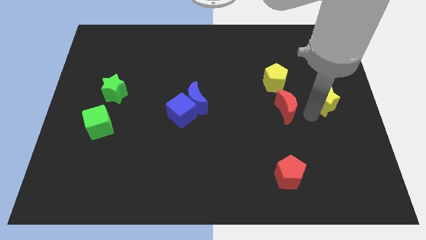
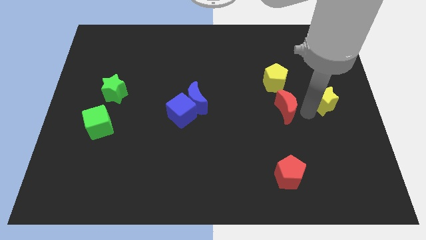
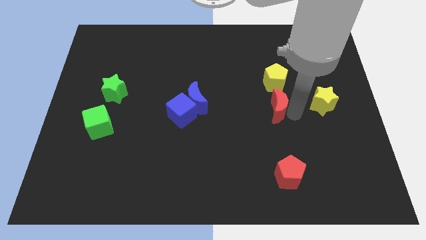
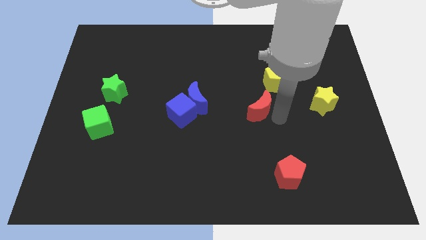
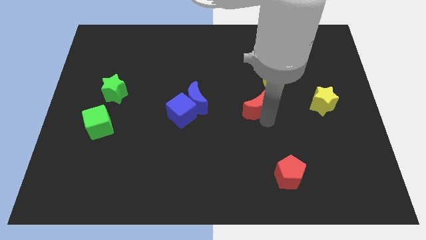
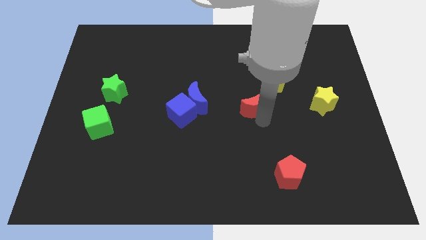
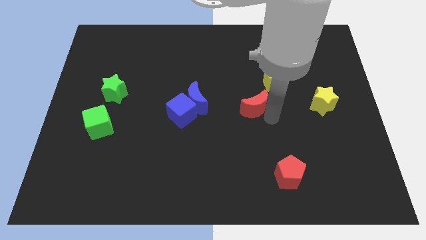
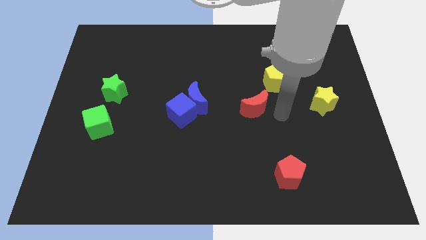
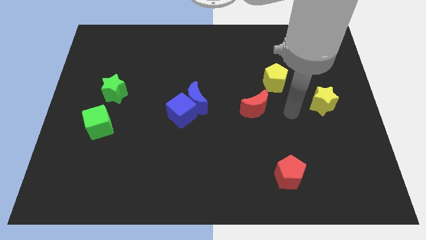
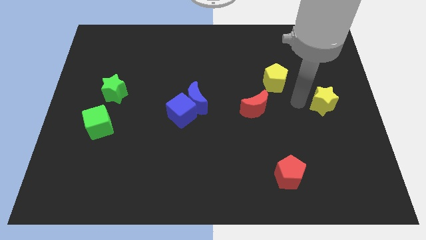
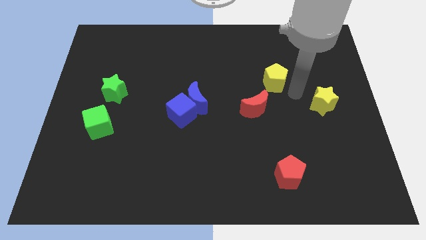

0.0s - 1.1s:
place the red moon diagonal to the yellow pentagon

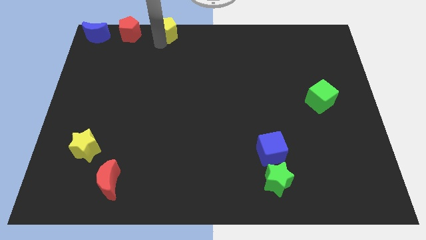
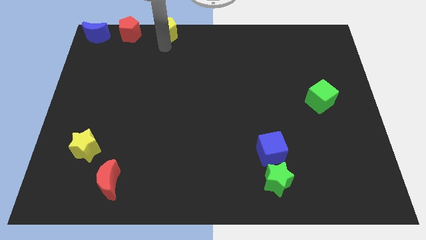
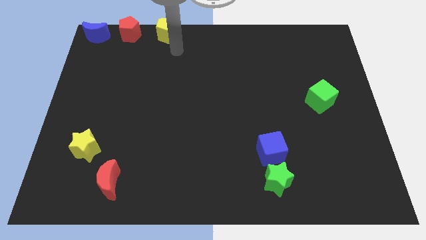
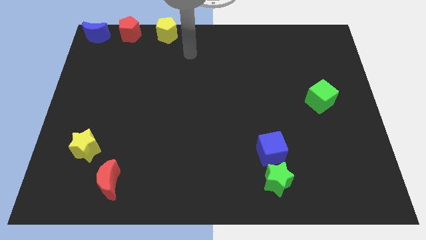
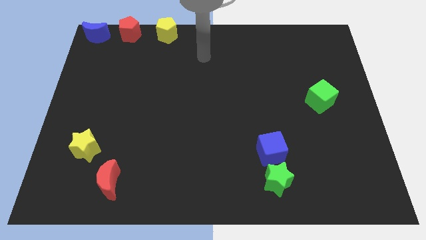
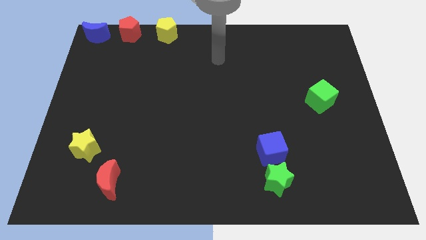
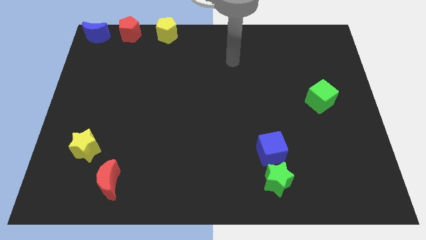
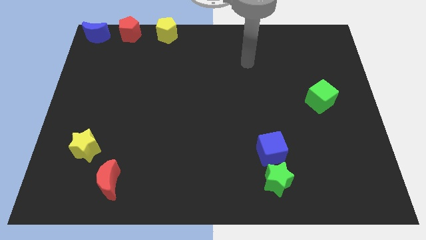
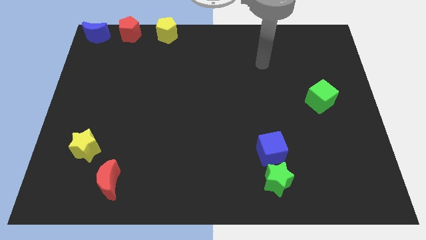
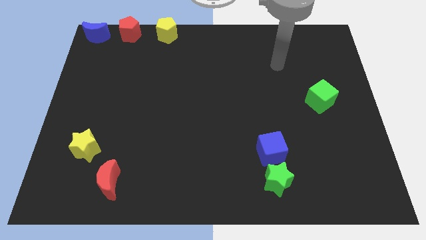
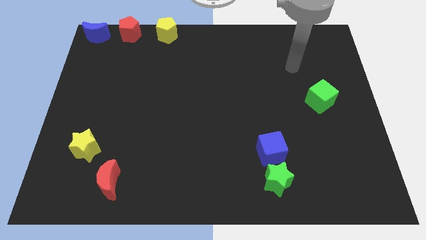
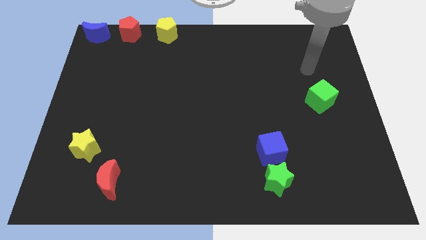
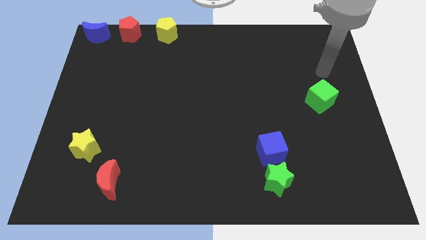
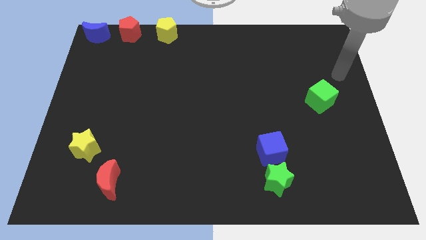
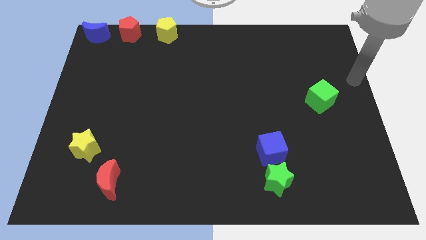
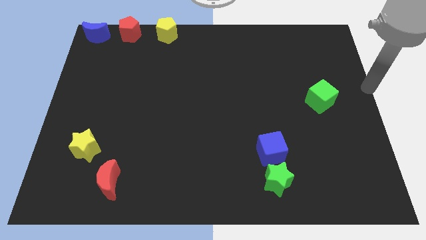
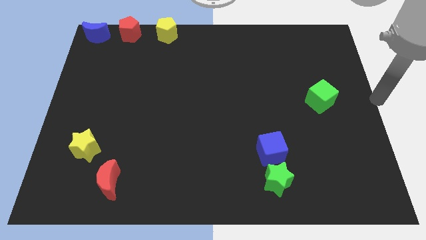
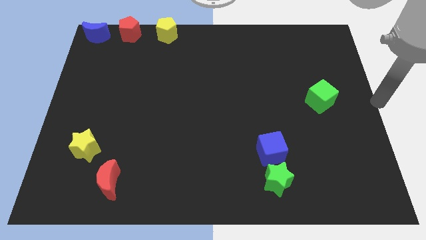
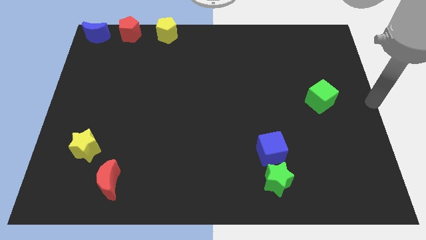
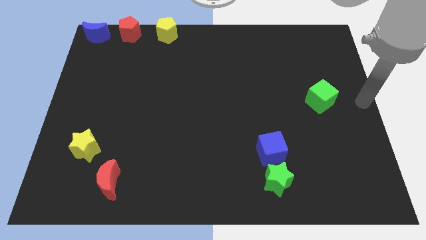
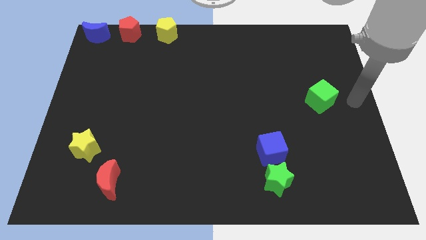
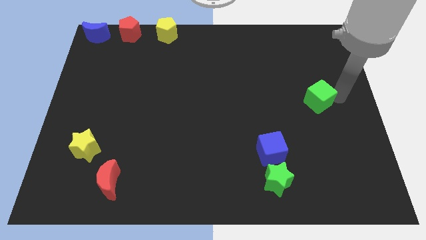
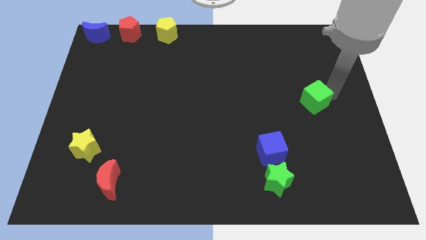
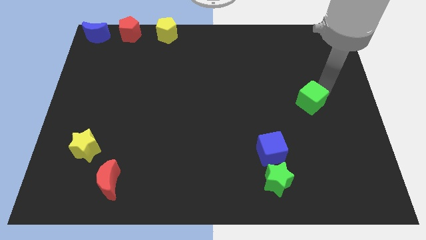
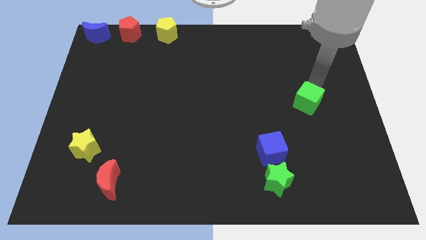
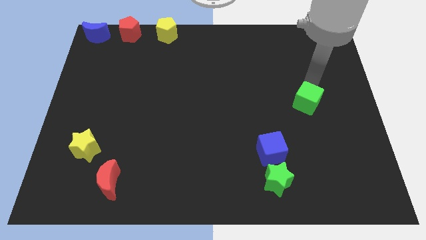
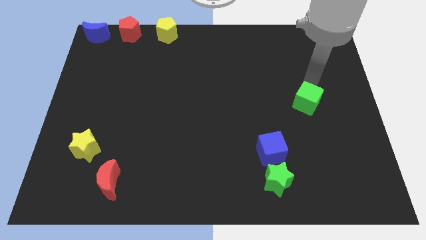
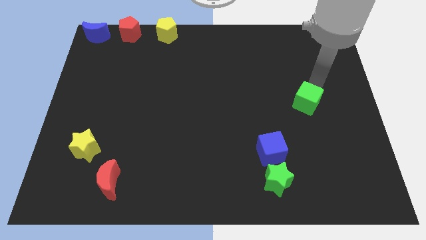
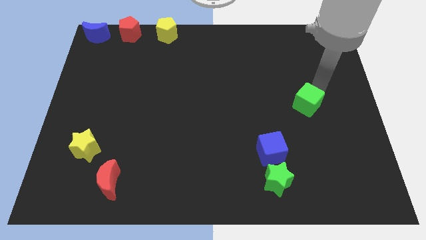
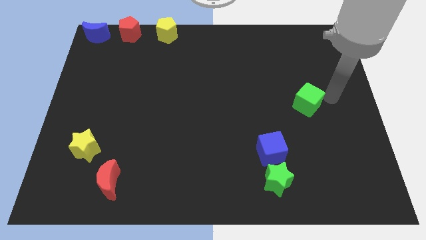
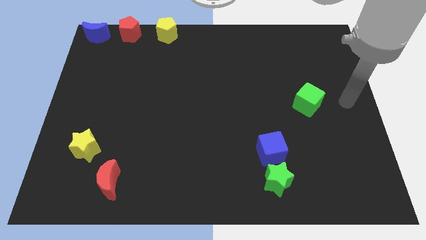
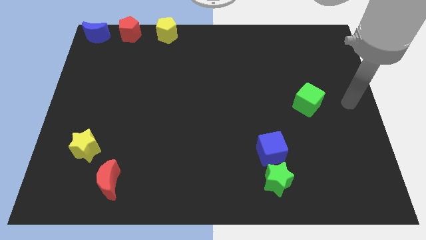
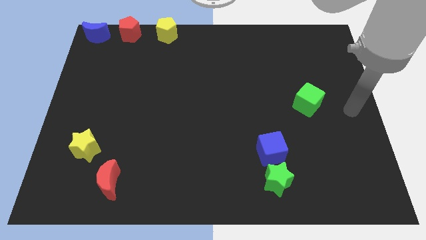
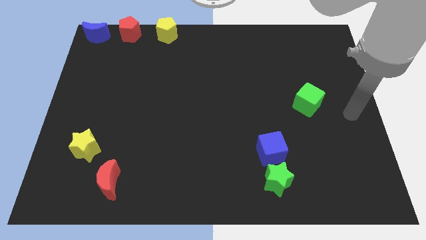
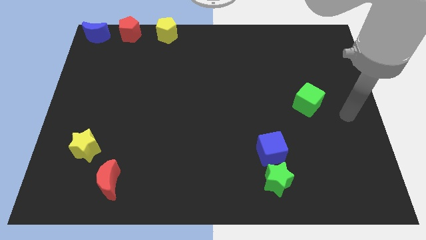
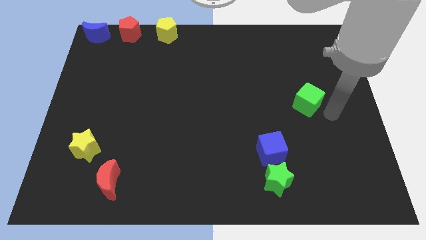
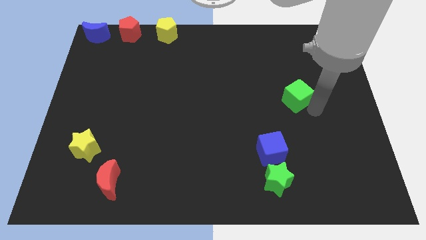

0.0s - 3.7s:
place the arm near the green cube

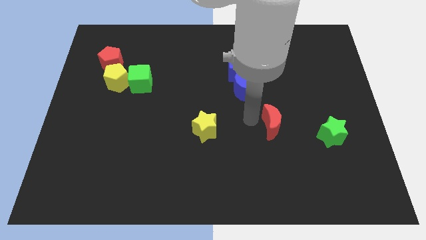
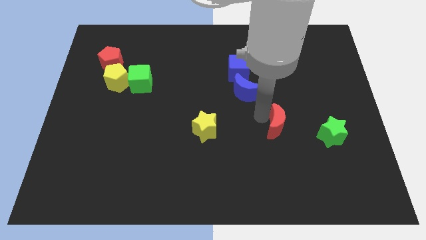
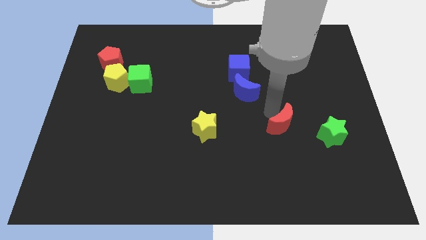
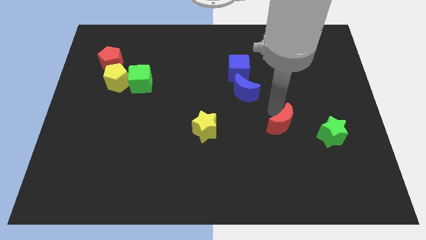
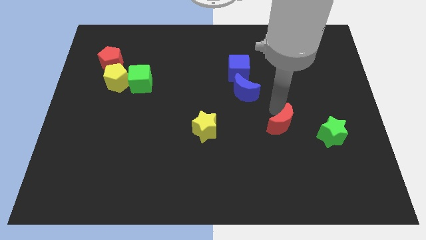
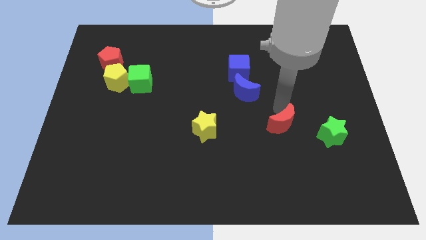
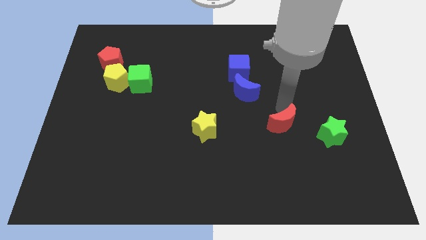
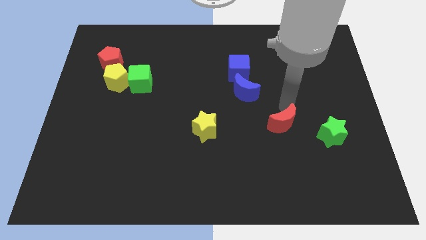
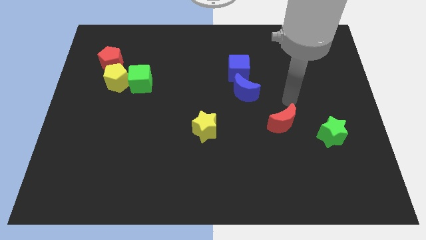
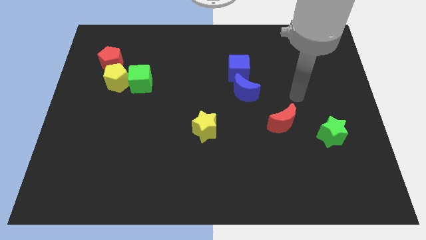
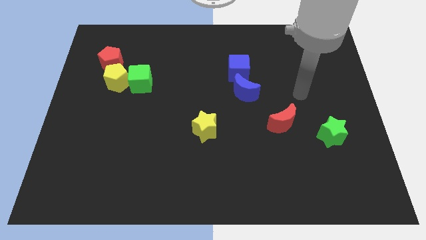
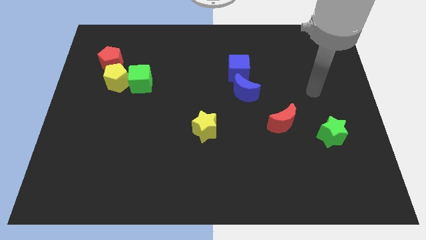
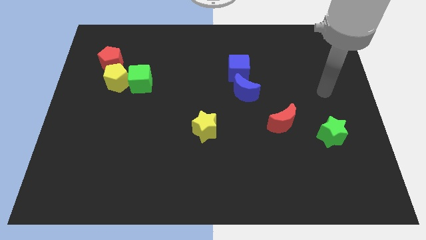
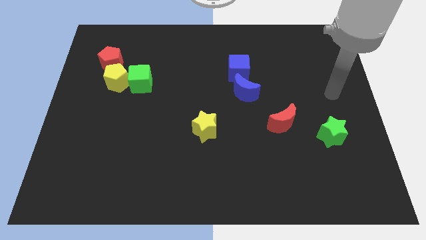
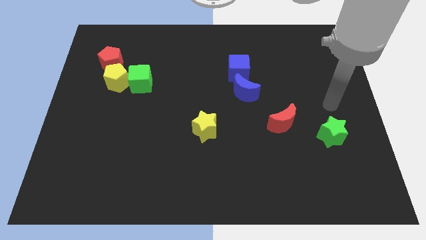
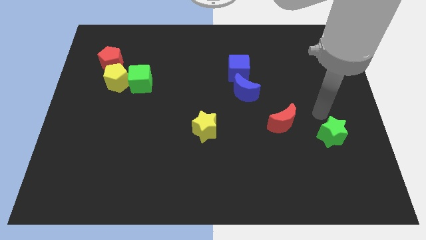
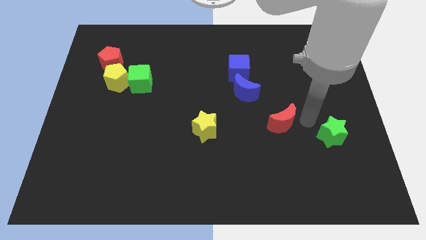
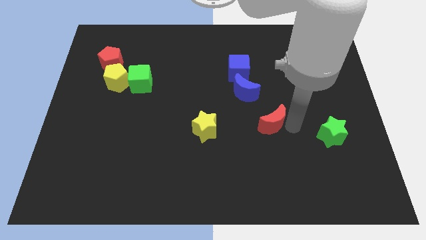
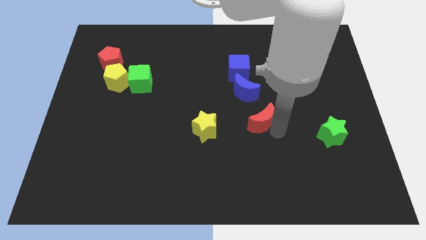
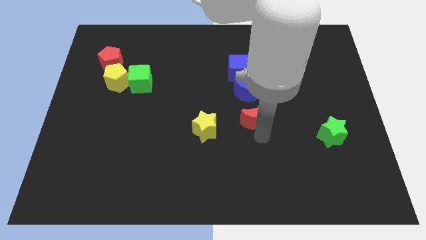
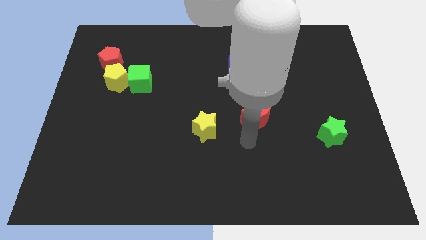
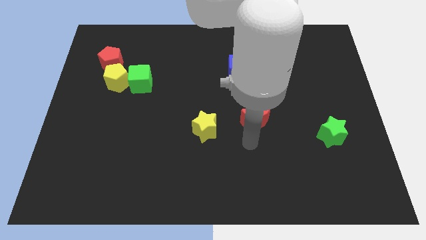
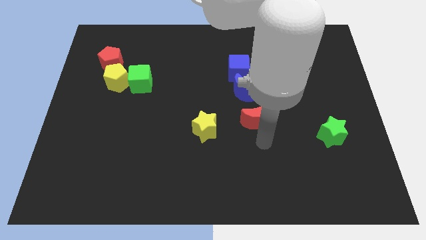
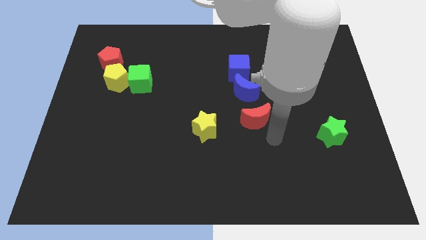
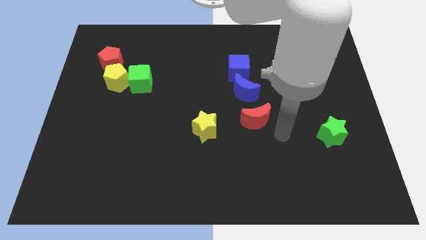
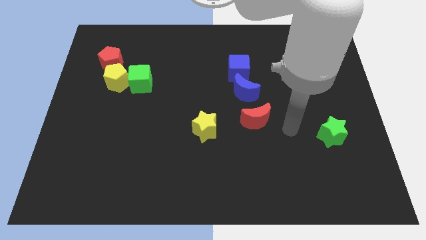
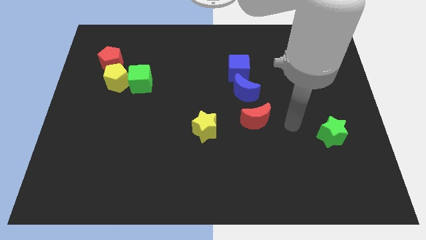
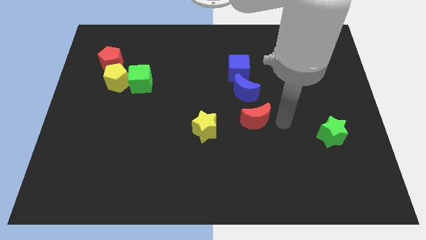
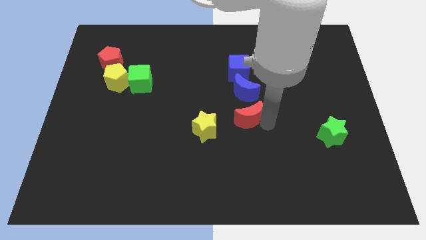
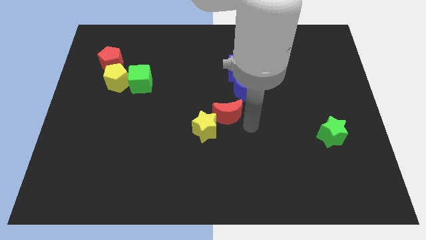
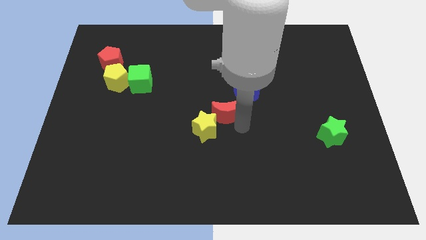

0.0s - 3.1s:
place red moon to top right of yellow star

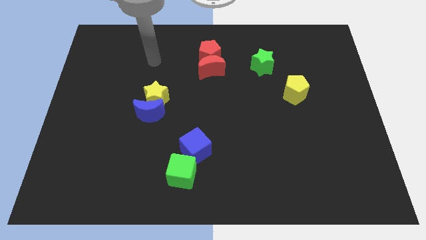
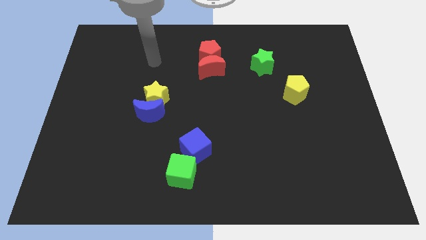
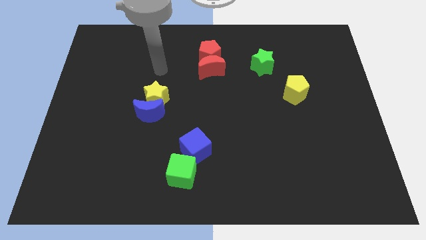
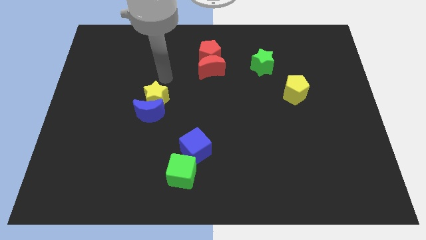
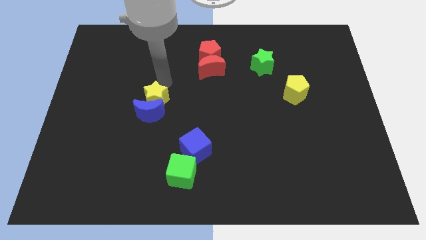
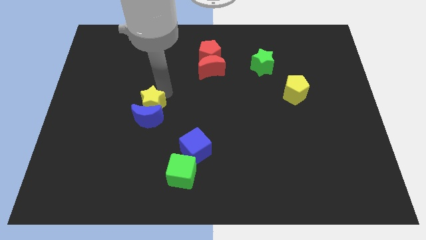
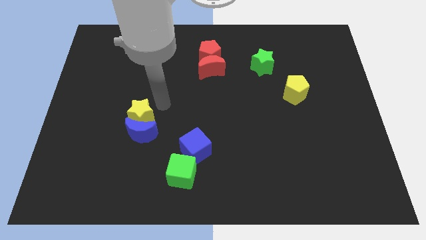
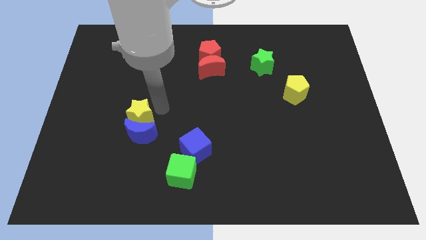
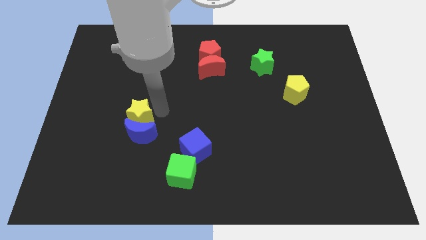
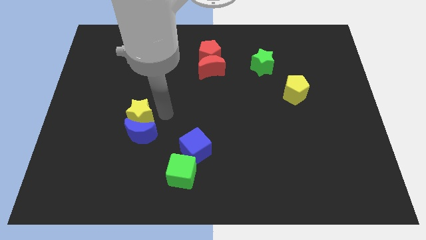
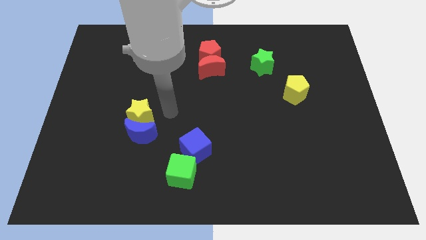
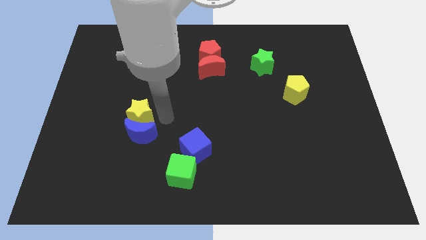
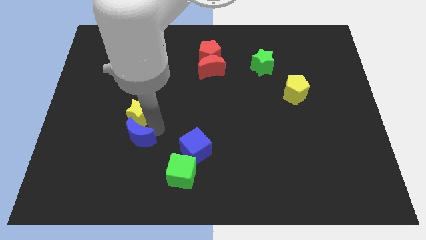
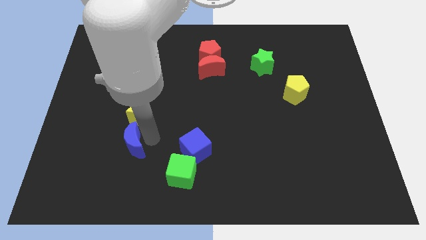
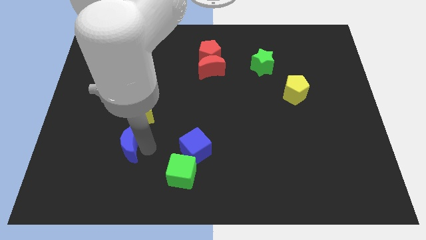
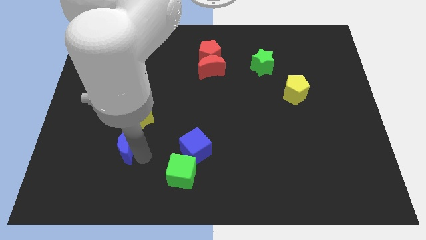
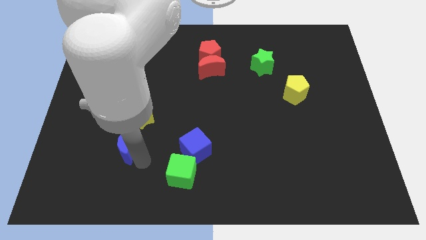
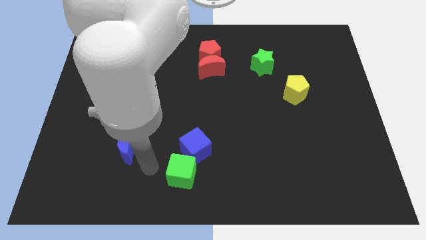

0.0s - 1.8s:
move the yellow star and the blue moon towards the bottom
